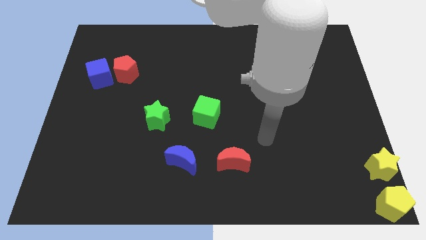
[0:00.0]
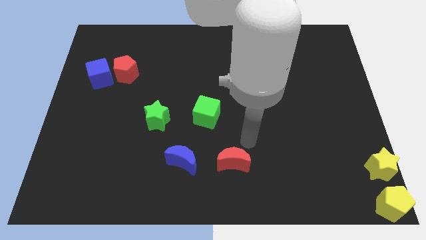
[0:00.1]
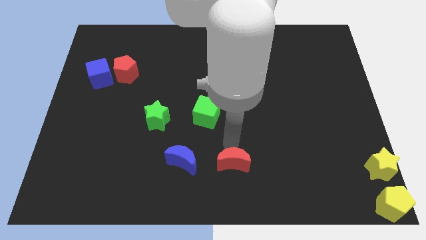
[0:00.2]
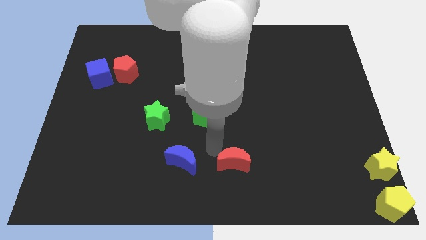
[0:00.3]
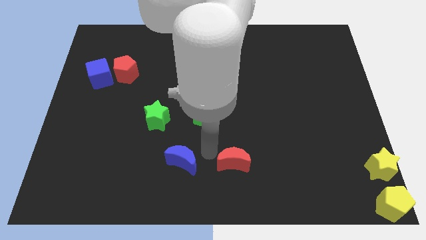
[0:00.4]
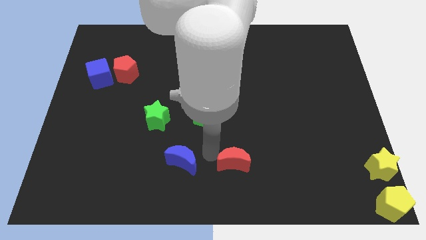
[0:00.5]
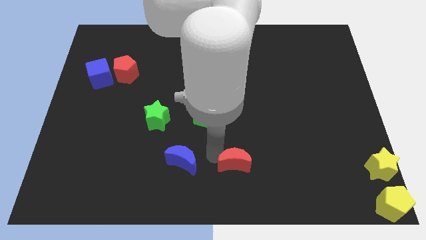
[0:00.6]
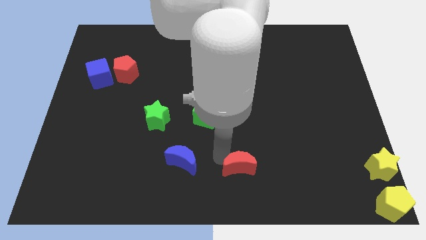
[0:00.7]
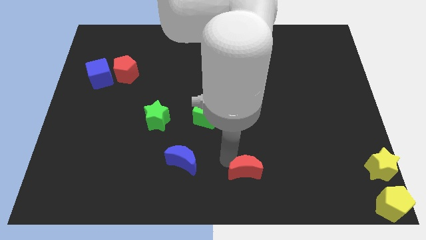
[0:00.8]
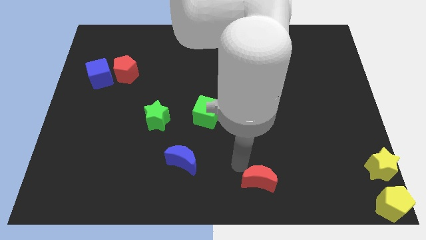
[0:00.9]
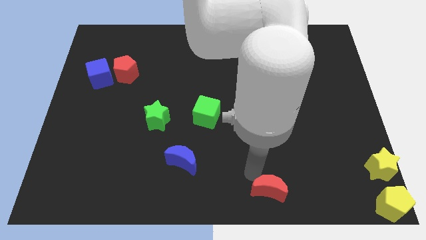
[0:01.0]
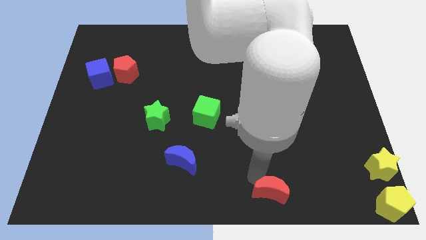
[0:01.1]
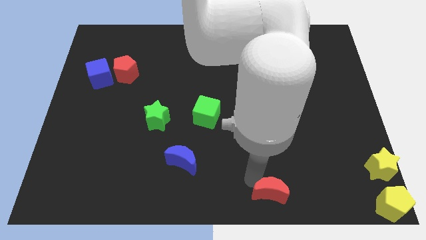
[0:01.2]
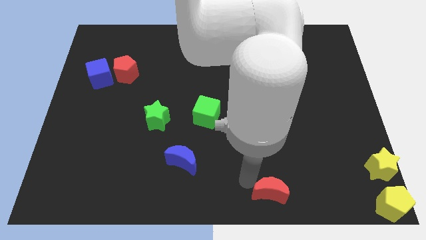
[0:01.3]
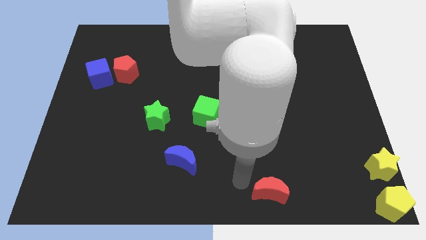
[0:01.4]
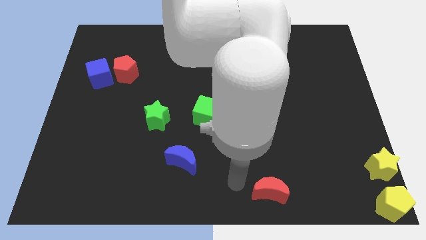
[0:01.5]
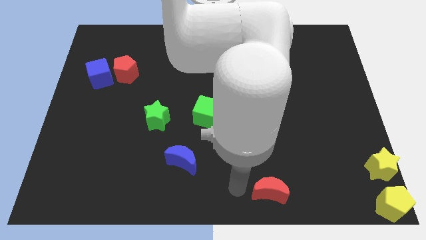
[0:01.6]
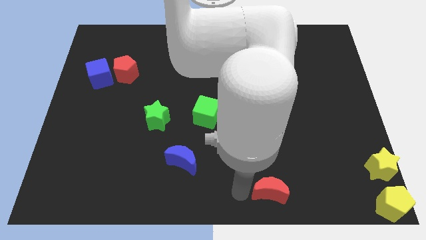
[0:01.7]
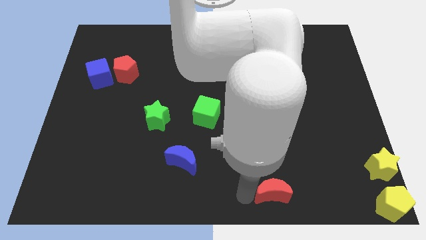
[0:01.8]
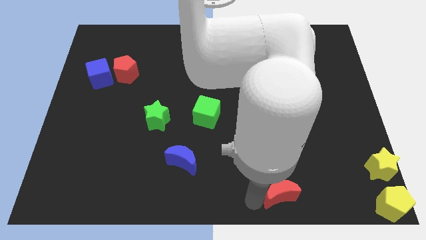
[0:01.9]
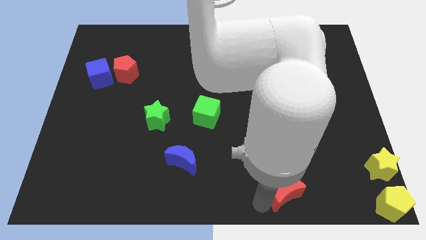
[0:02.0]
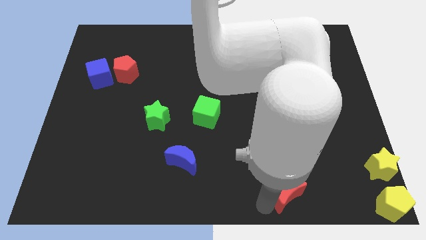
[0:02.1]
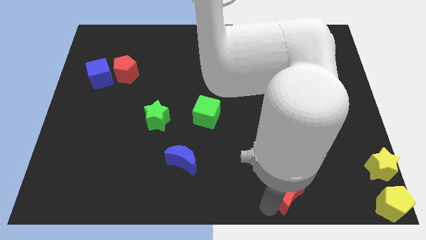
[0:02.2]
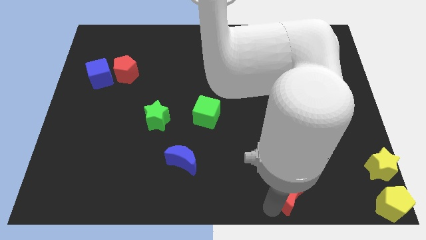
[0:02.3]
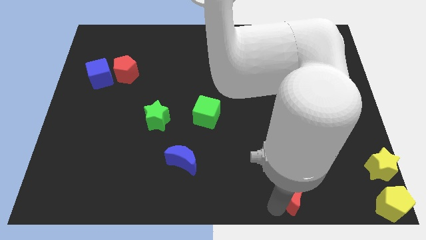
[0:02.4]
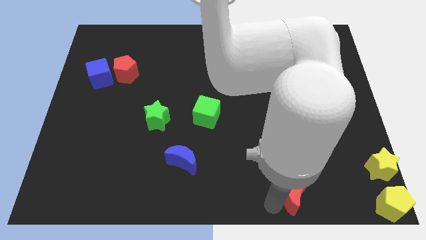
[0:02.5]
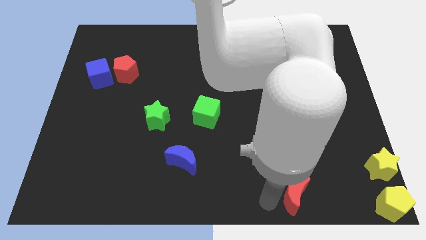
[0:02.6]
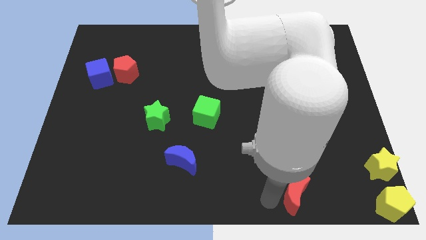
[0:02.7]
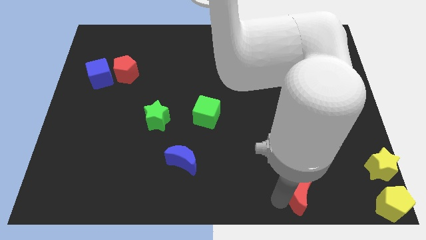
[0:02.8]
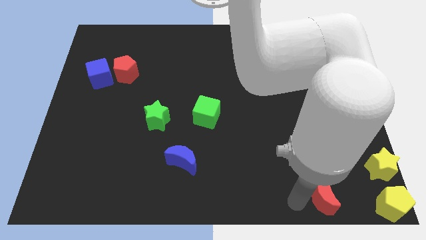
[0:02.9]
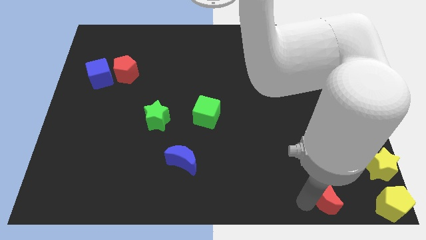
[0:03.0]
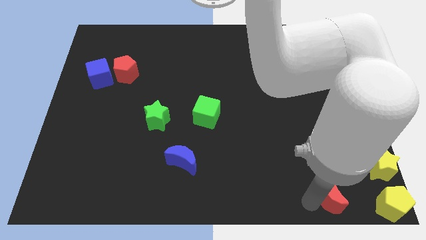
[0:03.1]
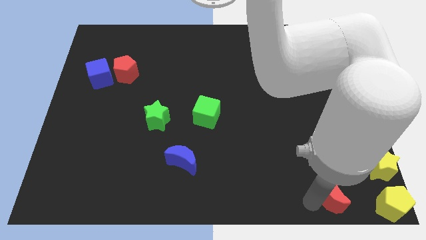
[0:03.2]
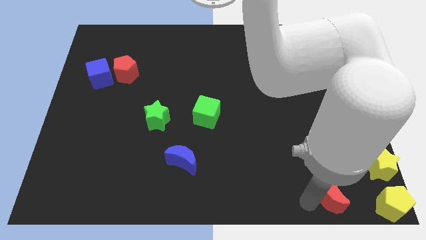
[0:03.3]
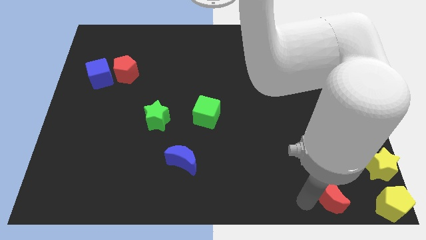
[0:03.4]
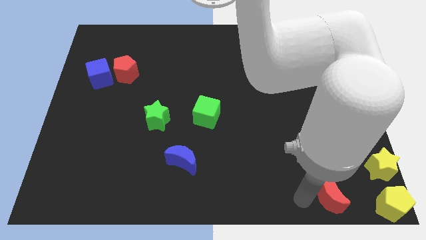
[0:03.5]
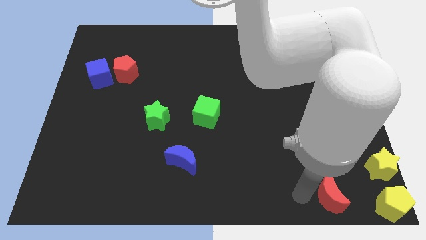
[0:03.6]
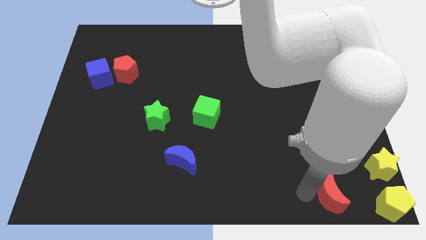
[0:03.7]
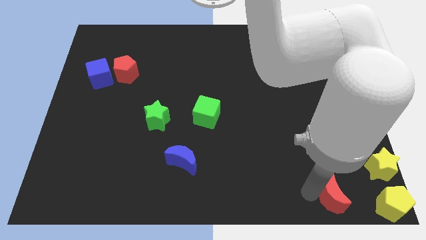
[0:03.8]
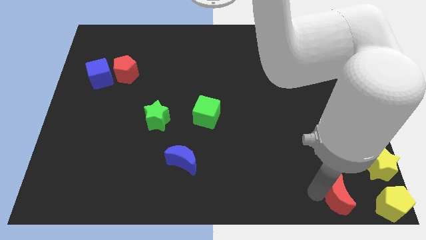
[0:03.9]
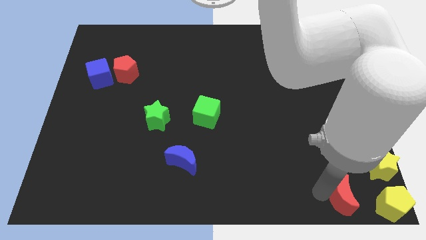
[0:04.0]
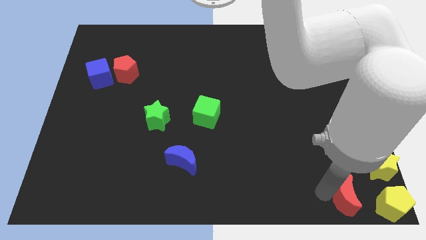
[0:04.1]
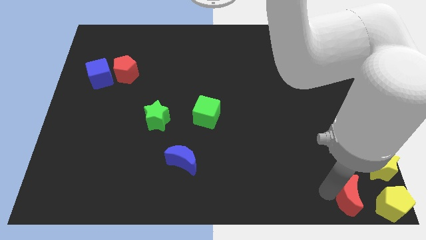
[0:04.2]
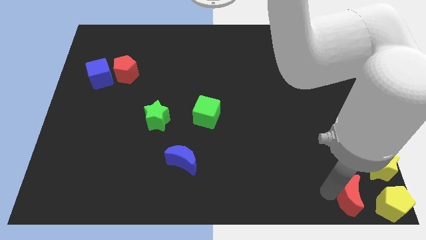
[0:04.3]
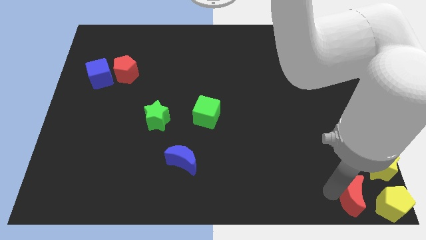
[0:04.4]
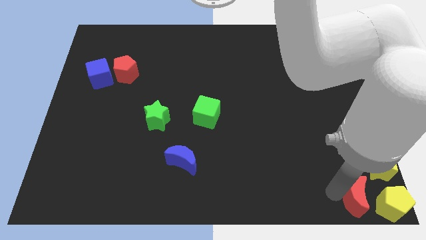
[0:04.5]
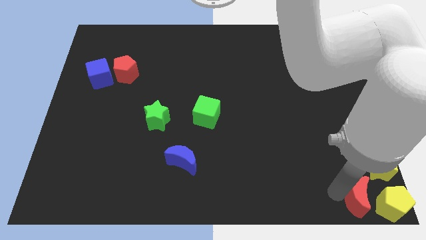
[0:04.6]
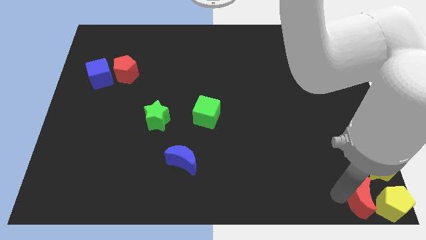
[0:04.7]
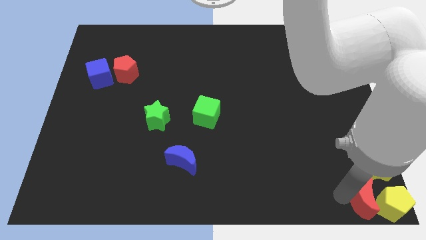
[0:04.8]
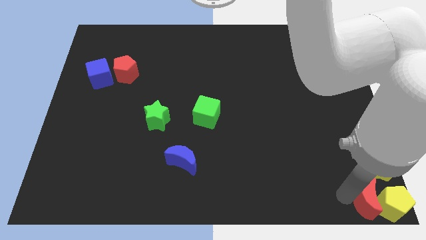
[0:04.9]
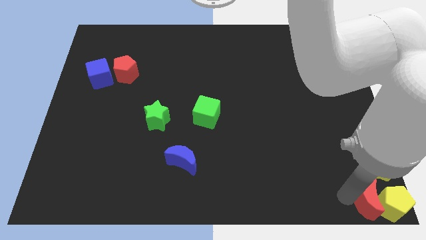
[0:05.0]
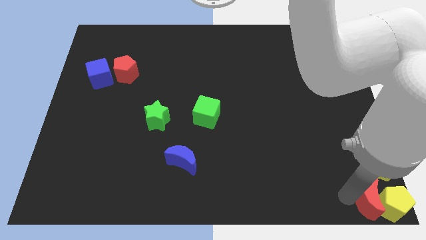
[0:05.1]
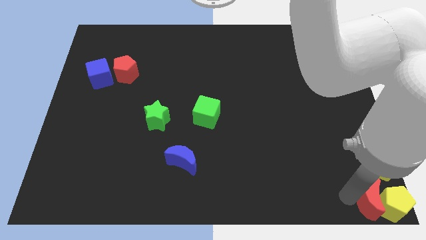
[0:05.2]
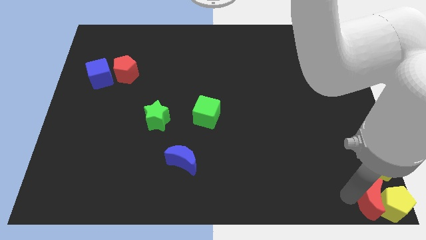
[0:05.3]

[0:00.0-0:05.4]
move the red crescent into the yellow pentagon and yellow star

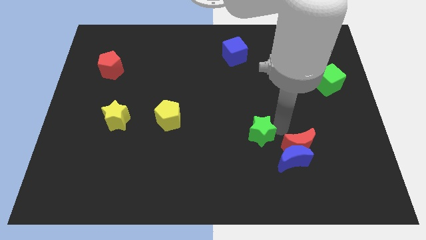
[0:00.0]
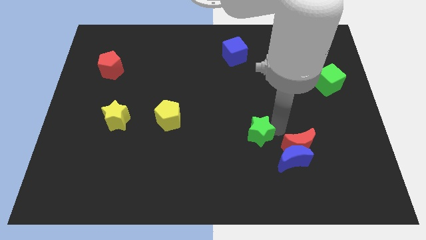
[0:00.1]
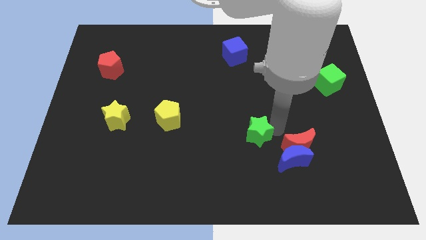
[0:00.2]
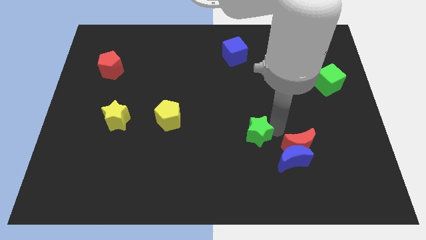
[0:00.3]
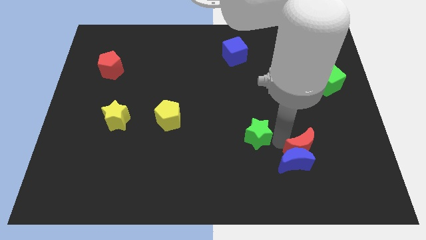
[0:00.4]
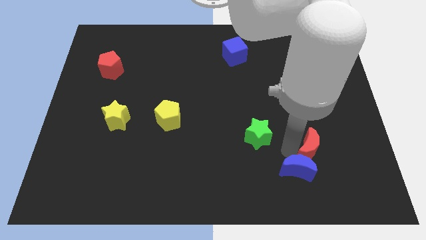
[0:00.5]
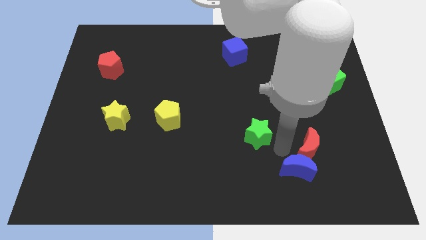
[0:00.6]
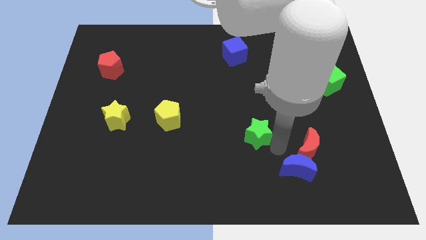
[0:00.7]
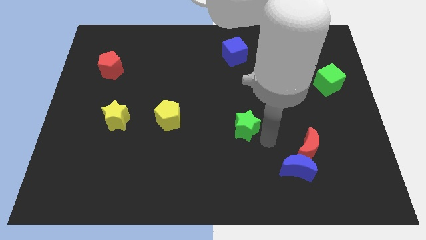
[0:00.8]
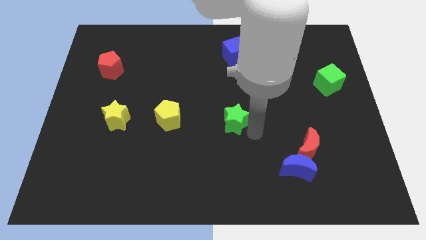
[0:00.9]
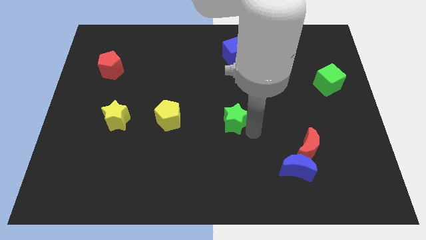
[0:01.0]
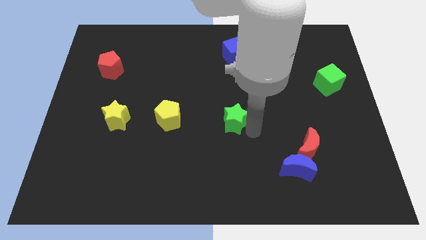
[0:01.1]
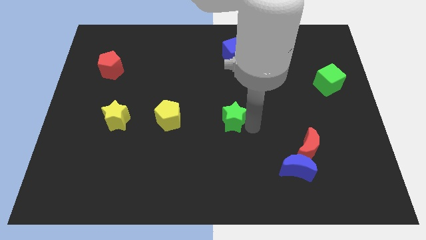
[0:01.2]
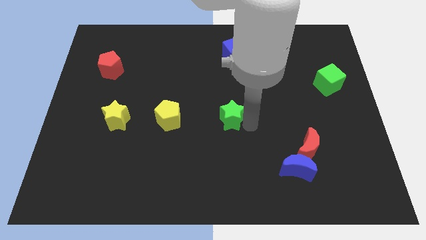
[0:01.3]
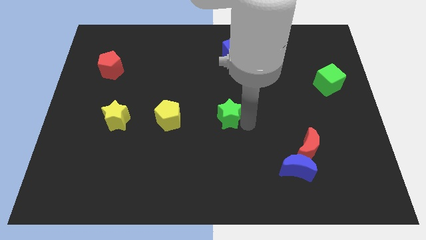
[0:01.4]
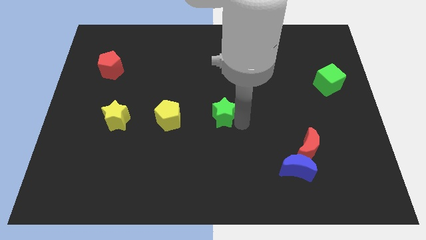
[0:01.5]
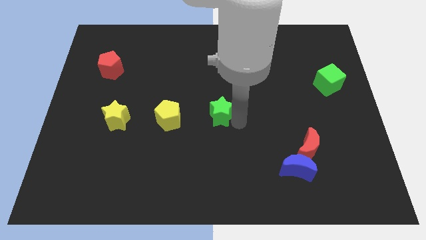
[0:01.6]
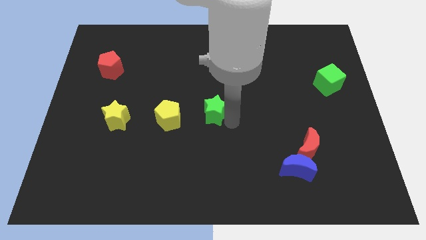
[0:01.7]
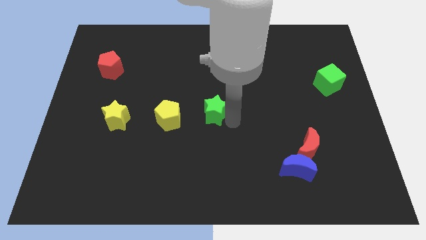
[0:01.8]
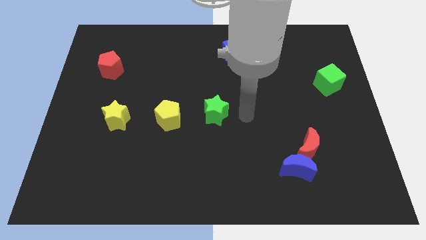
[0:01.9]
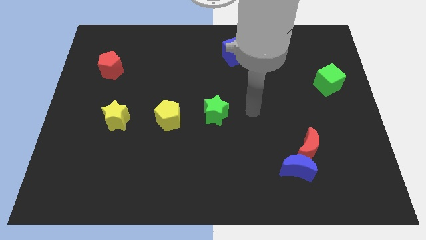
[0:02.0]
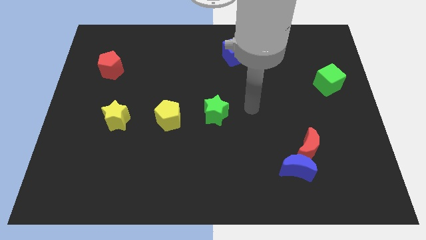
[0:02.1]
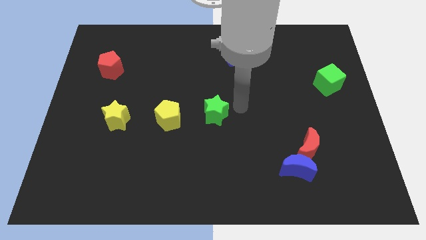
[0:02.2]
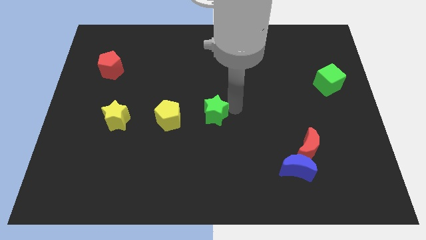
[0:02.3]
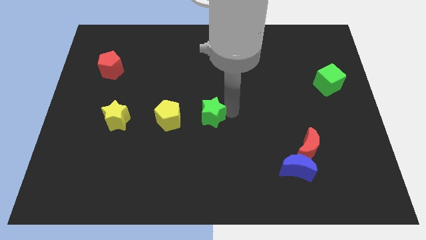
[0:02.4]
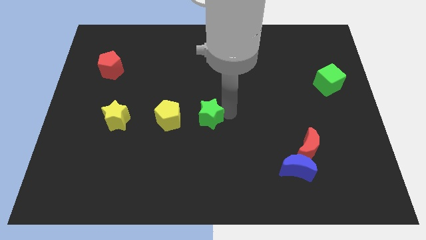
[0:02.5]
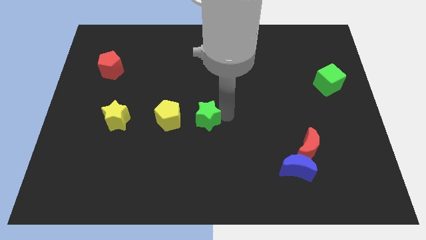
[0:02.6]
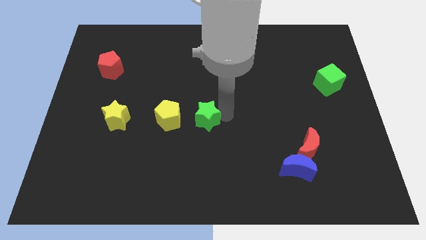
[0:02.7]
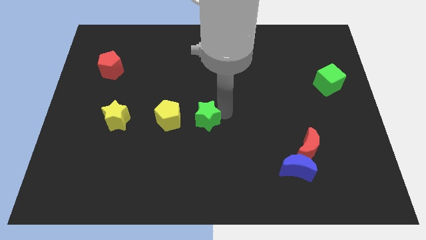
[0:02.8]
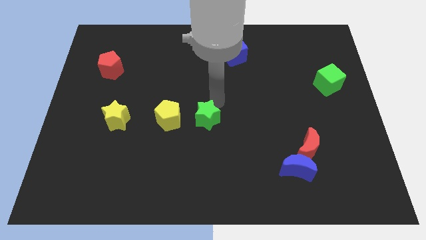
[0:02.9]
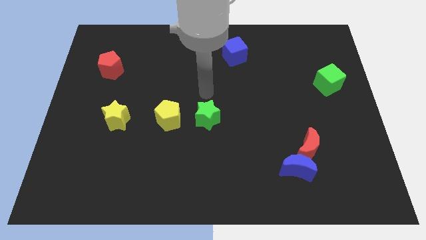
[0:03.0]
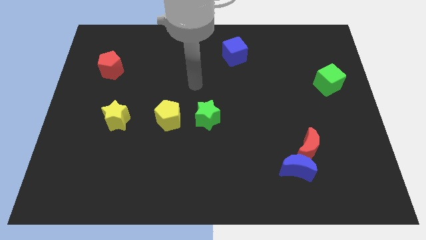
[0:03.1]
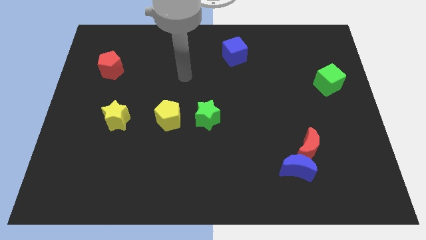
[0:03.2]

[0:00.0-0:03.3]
place the green star to the right of the yellow pentagon

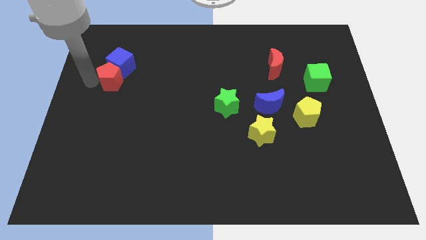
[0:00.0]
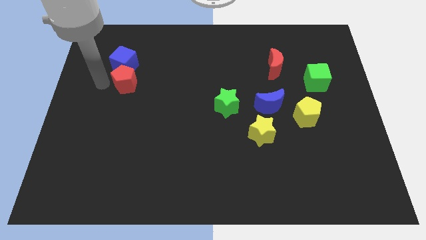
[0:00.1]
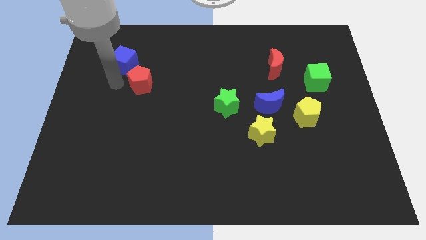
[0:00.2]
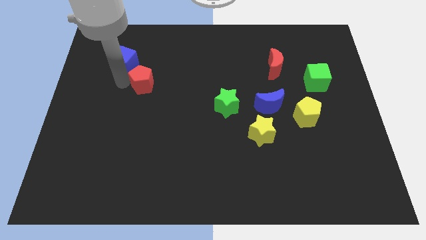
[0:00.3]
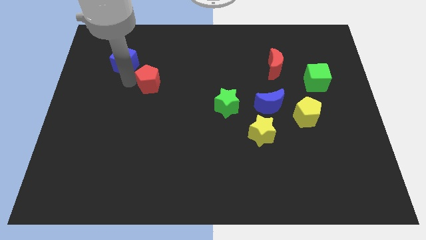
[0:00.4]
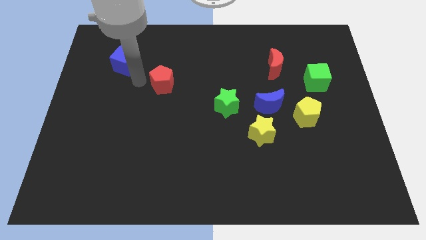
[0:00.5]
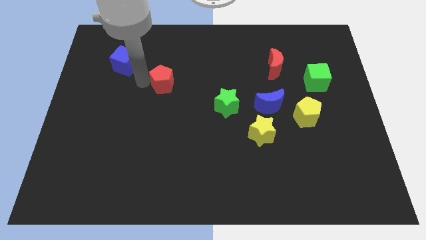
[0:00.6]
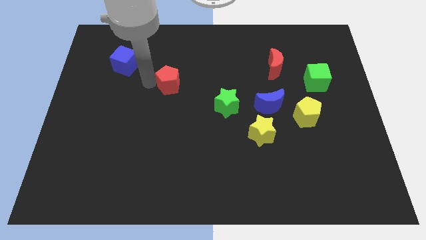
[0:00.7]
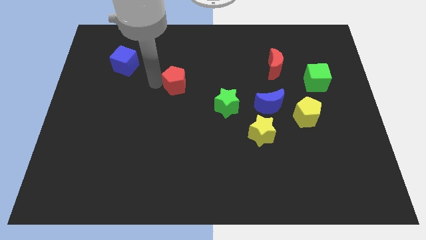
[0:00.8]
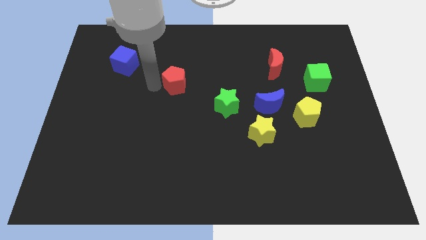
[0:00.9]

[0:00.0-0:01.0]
push the red pentagon diagonally in between the blue cube and the green star
